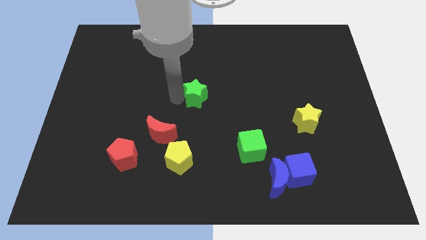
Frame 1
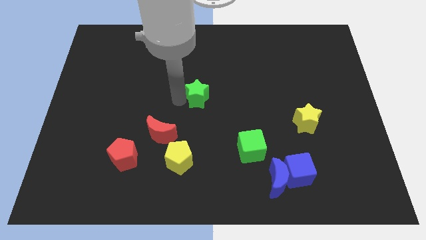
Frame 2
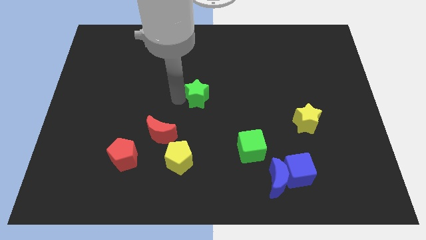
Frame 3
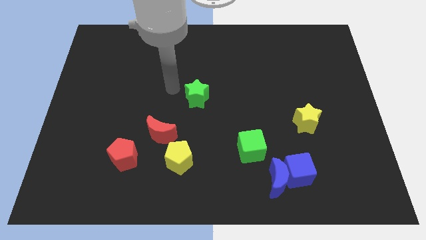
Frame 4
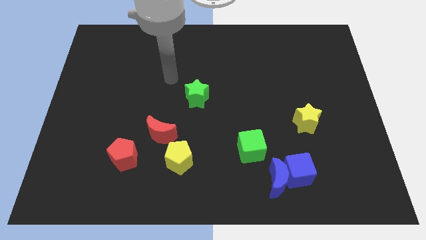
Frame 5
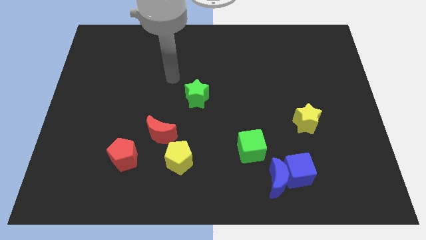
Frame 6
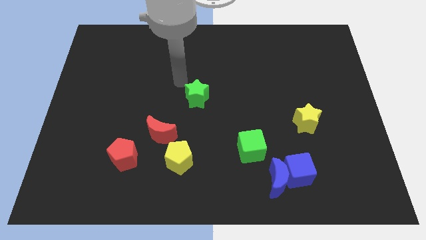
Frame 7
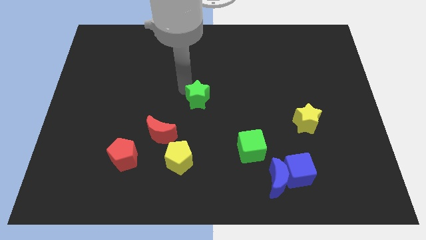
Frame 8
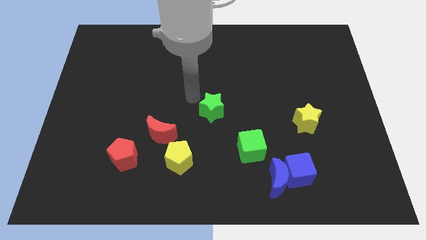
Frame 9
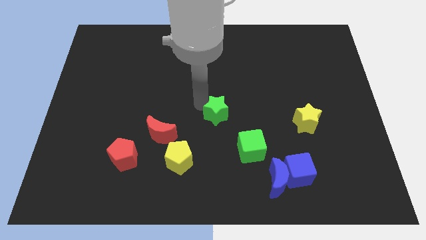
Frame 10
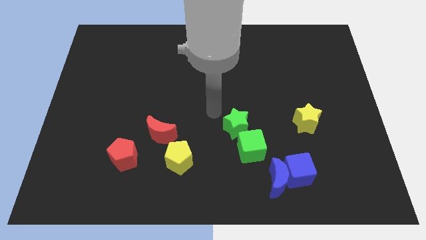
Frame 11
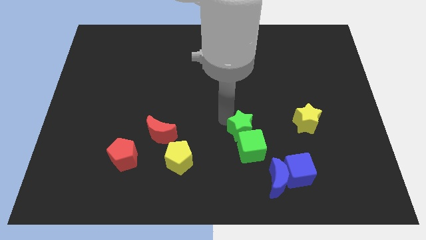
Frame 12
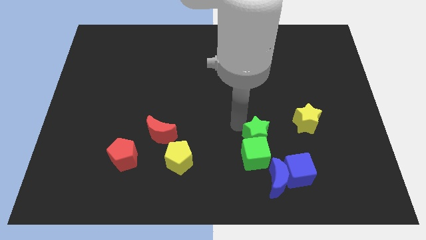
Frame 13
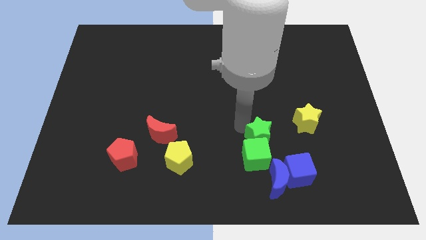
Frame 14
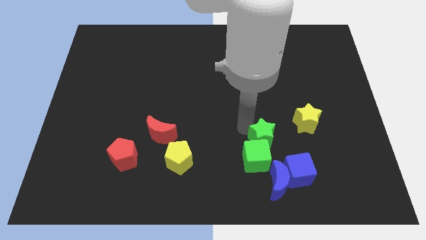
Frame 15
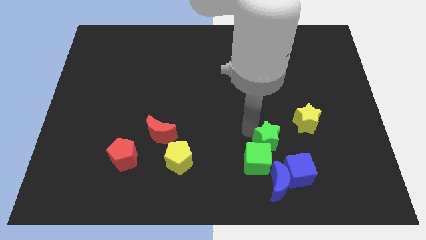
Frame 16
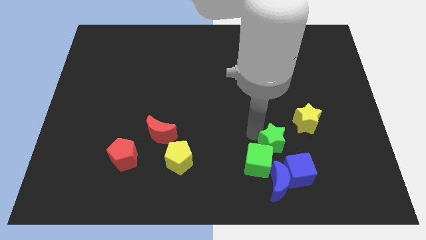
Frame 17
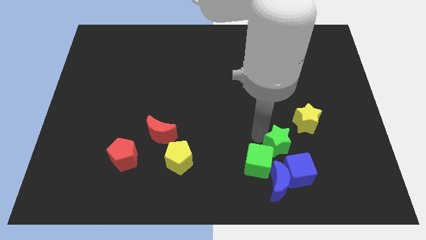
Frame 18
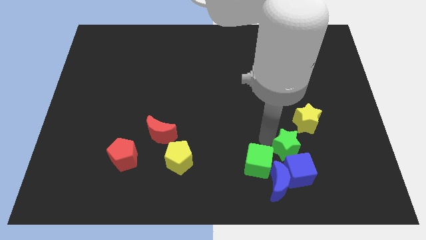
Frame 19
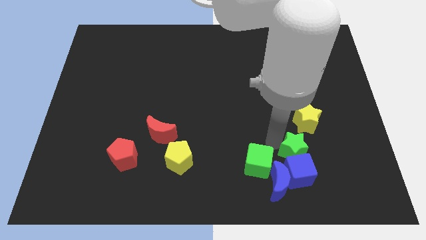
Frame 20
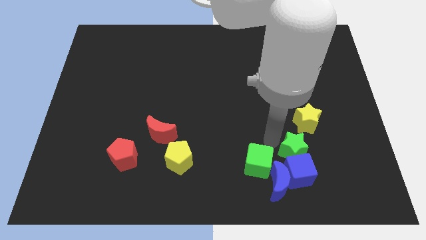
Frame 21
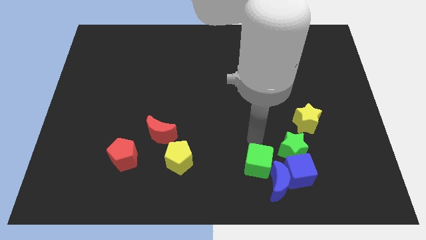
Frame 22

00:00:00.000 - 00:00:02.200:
place the green star on bottom left of yellow star

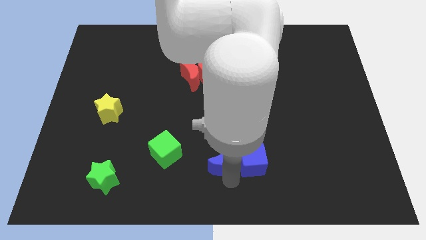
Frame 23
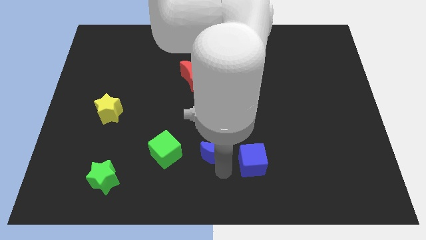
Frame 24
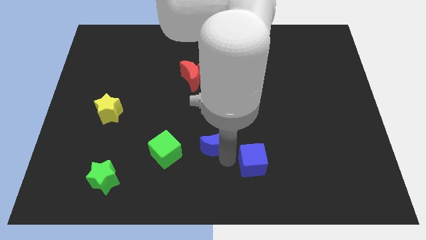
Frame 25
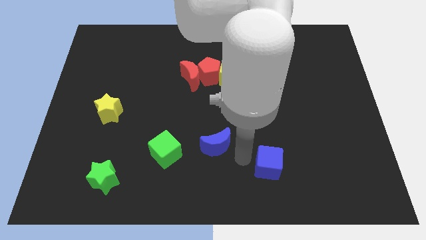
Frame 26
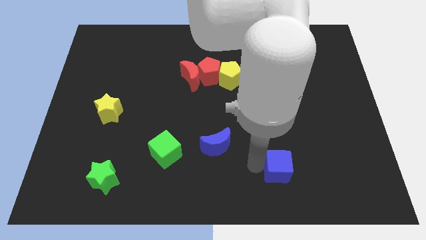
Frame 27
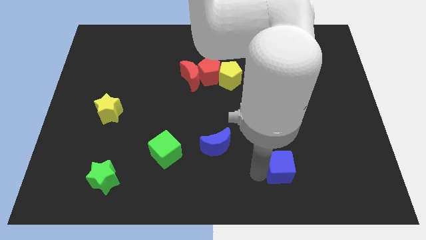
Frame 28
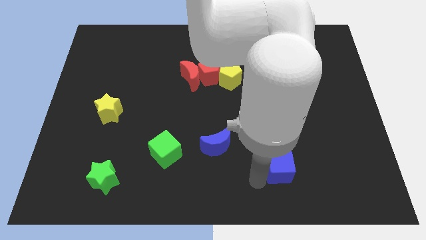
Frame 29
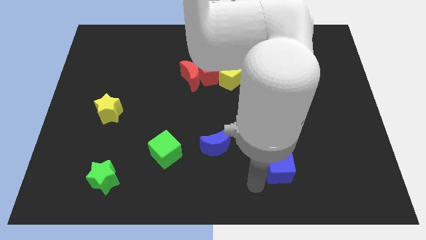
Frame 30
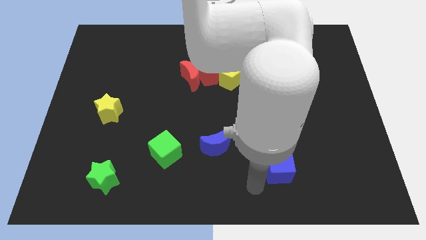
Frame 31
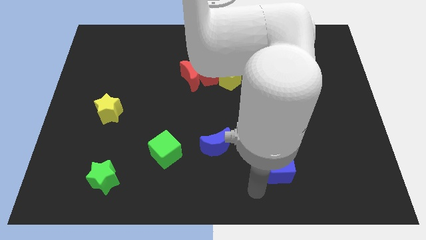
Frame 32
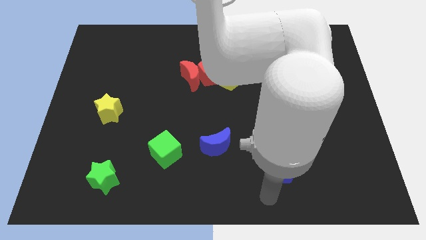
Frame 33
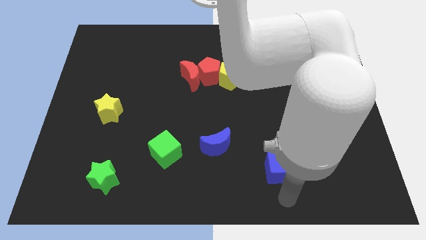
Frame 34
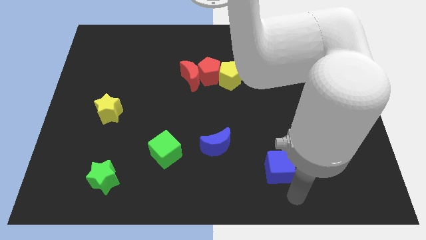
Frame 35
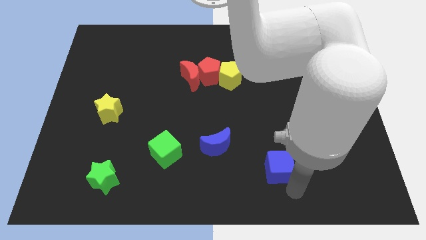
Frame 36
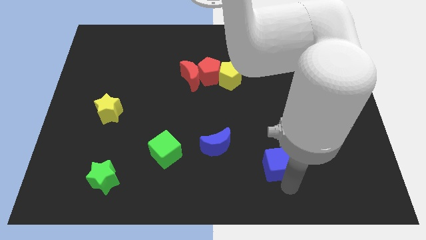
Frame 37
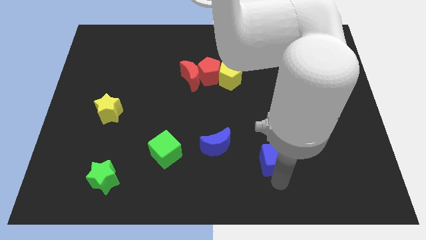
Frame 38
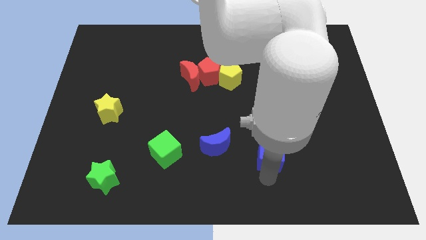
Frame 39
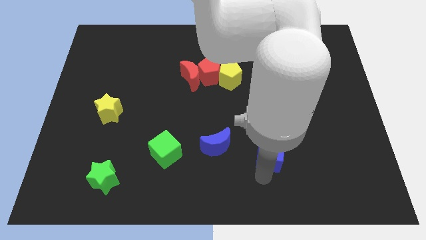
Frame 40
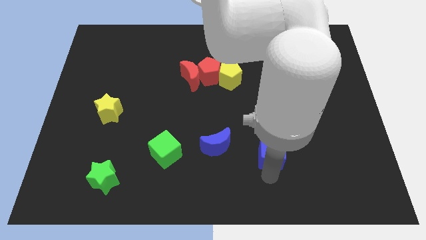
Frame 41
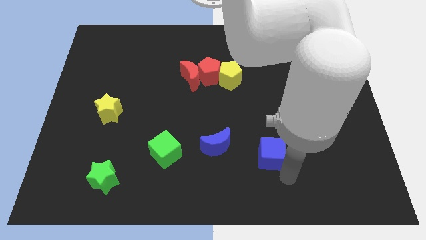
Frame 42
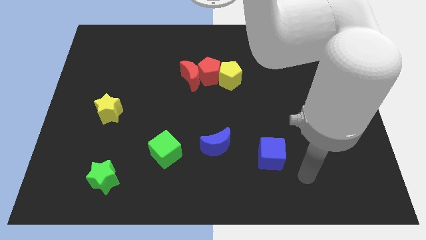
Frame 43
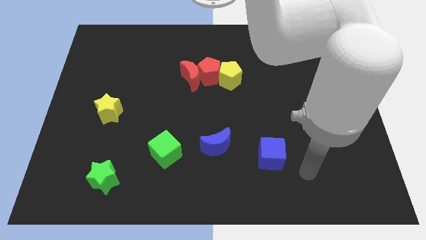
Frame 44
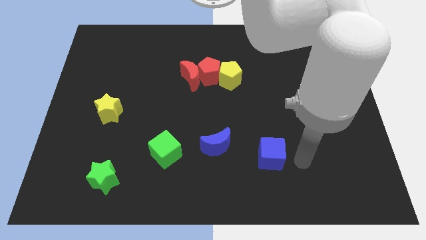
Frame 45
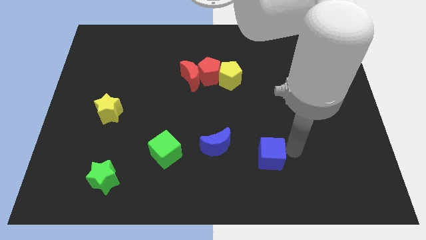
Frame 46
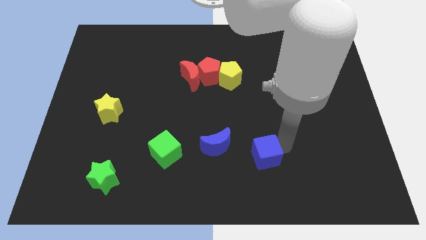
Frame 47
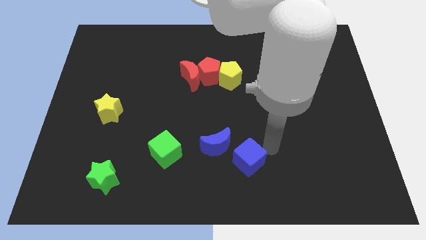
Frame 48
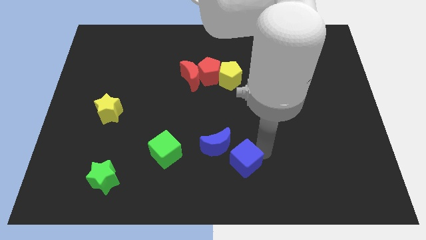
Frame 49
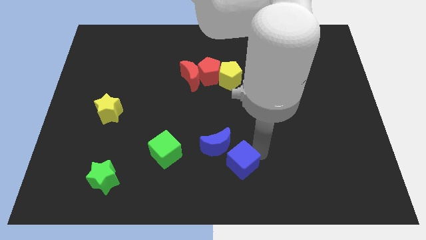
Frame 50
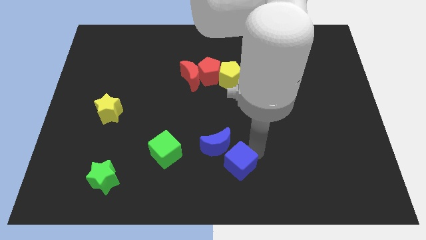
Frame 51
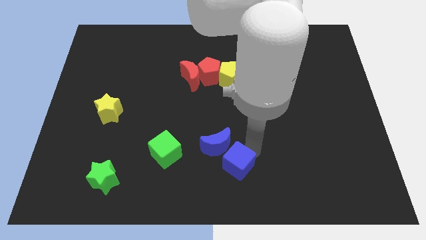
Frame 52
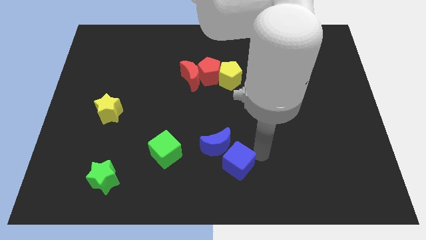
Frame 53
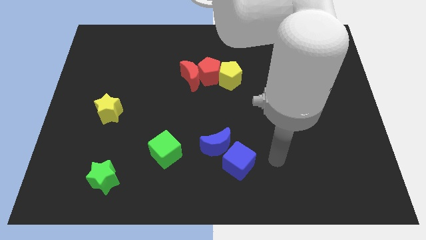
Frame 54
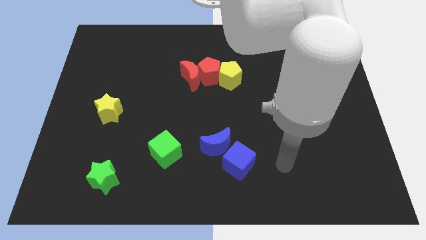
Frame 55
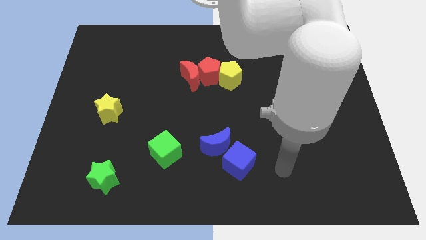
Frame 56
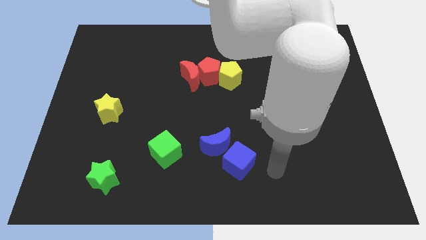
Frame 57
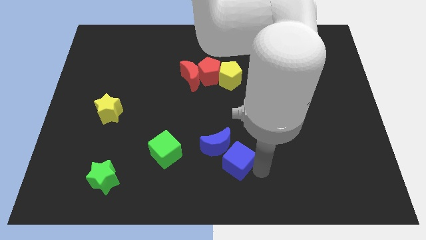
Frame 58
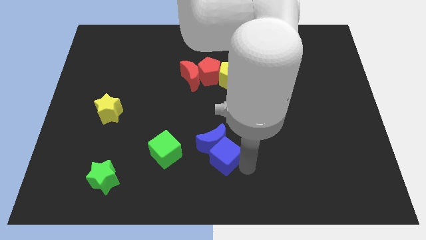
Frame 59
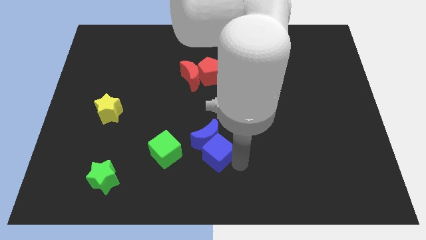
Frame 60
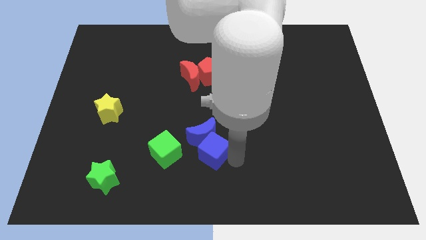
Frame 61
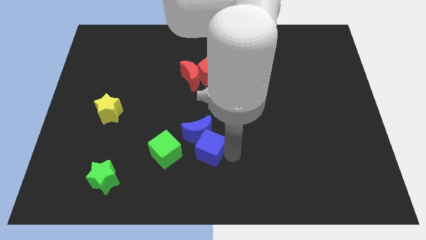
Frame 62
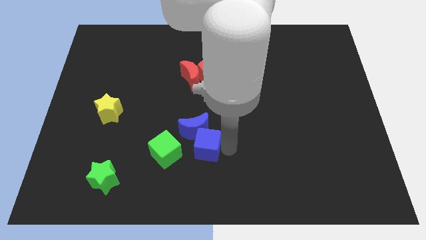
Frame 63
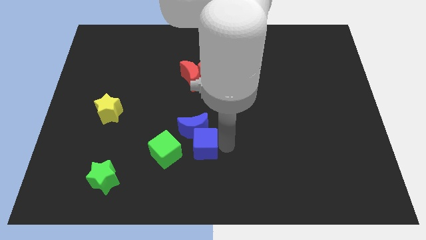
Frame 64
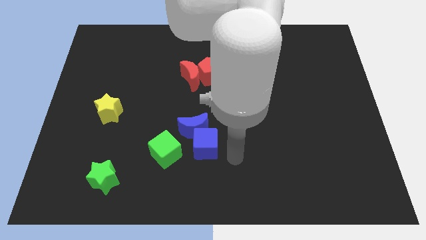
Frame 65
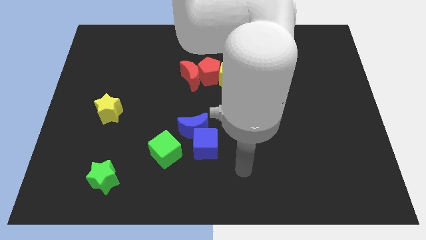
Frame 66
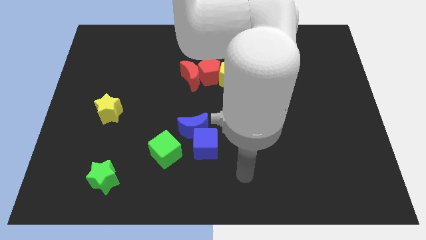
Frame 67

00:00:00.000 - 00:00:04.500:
push blue block along with blue crescent

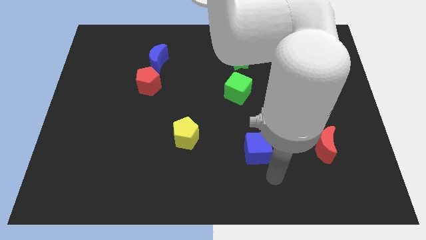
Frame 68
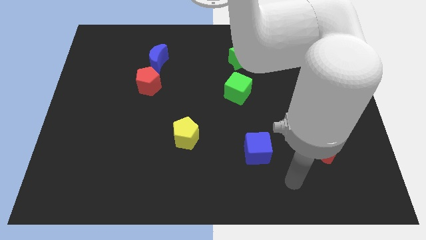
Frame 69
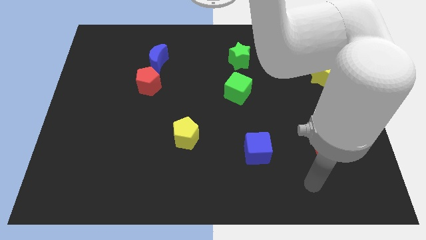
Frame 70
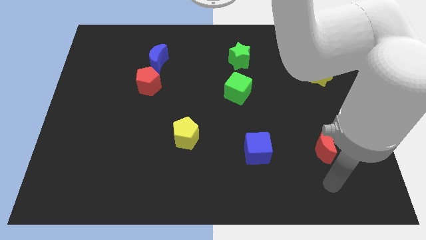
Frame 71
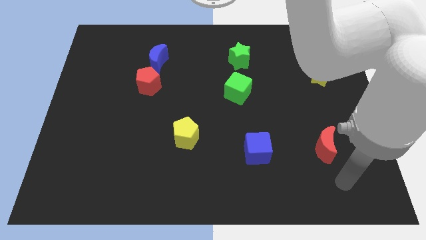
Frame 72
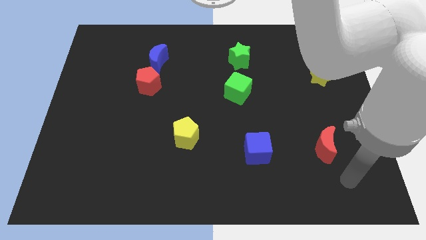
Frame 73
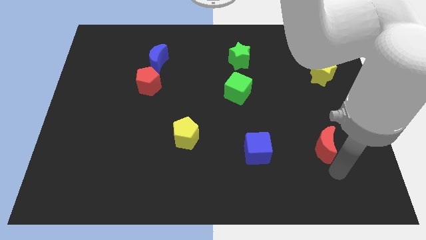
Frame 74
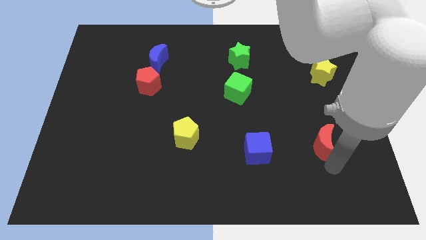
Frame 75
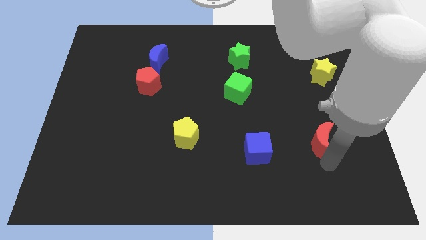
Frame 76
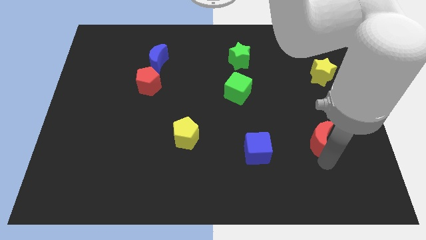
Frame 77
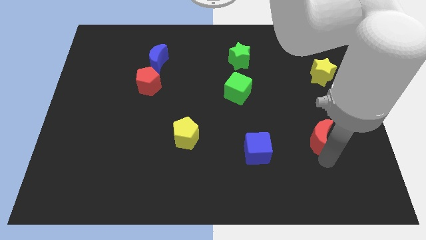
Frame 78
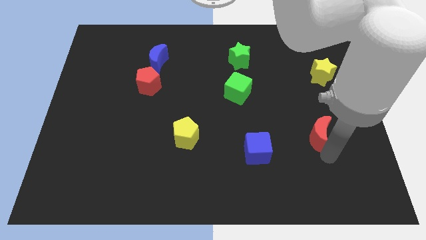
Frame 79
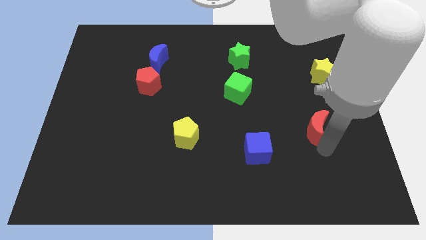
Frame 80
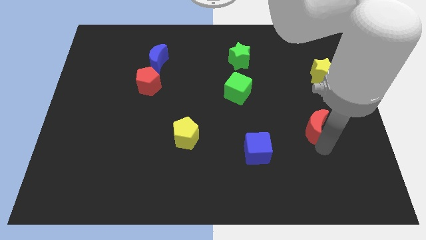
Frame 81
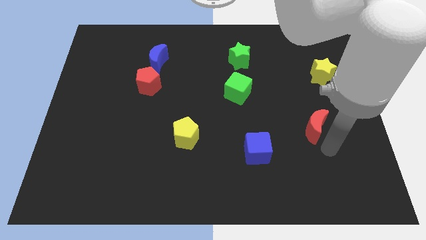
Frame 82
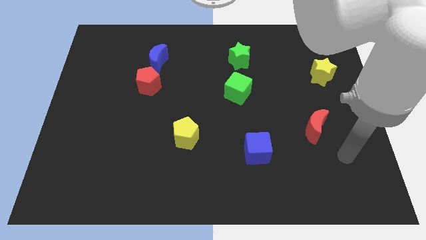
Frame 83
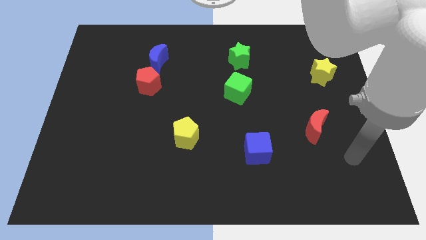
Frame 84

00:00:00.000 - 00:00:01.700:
place the red moon diagonal to the green cube

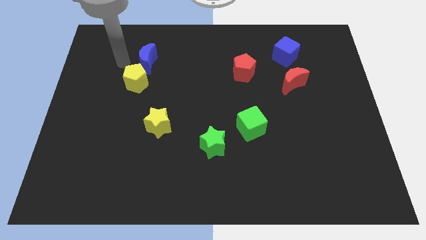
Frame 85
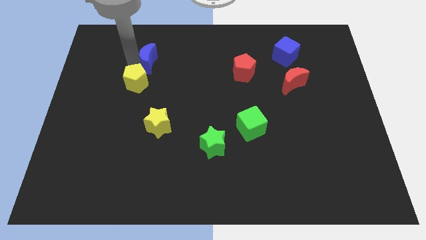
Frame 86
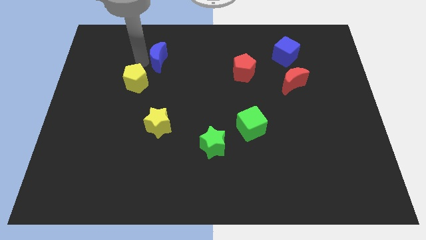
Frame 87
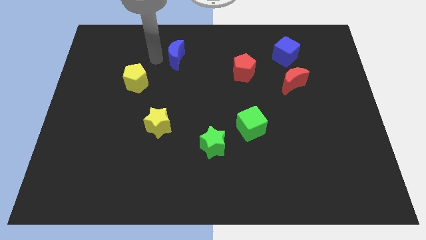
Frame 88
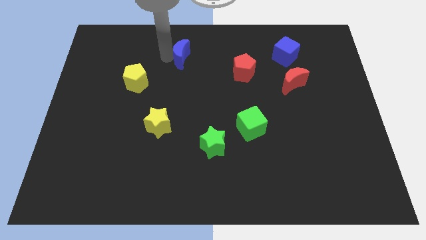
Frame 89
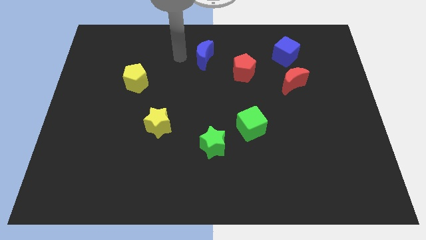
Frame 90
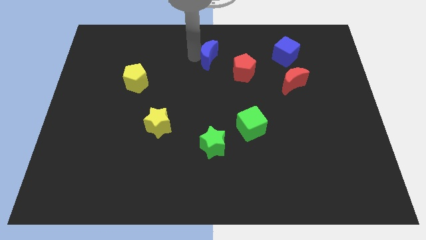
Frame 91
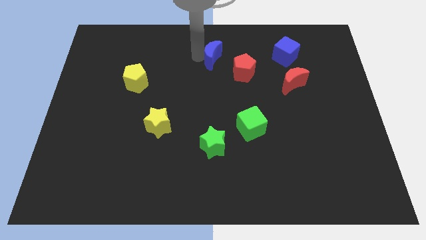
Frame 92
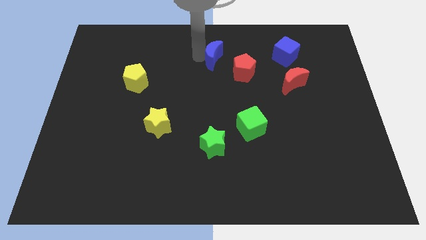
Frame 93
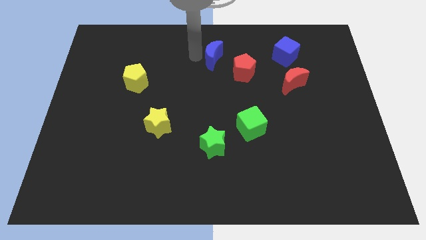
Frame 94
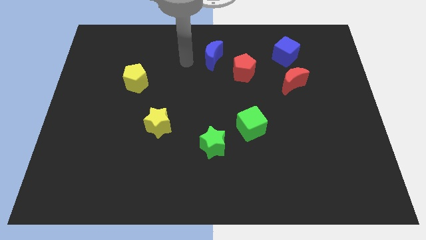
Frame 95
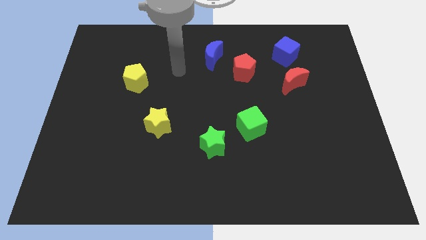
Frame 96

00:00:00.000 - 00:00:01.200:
move blue crescent to the top center of the board
